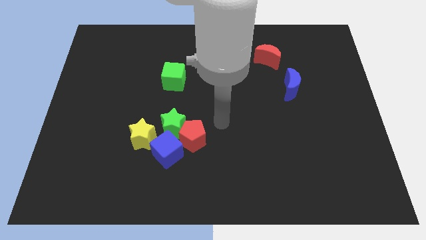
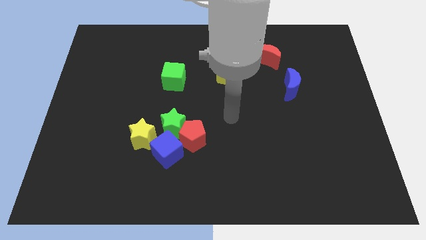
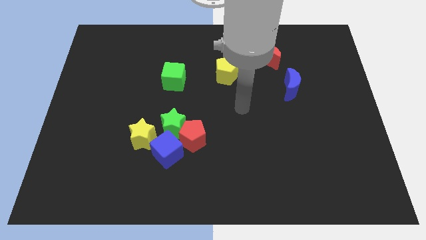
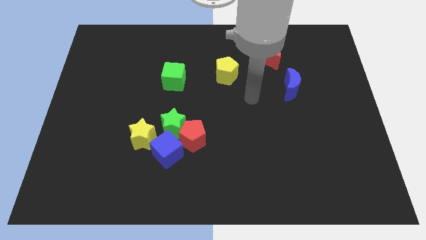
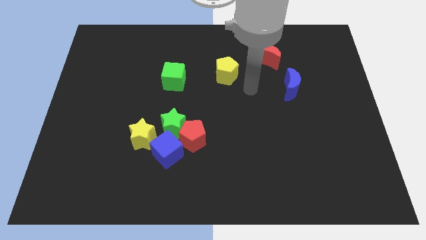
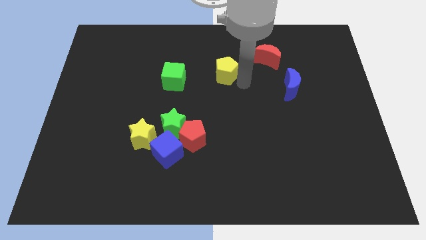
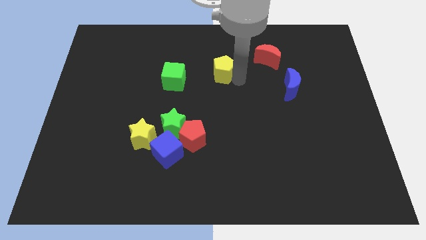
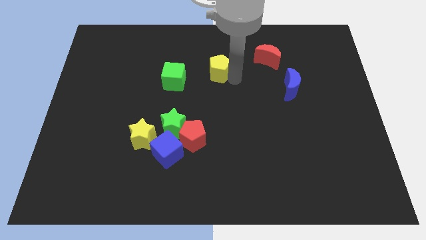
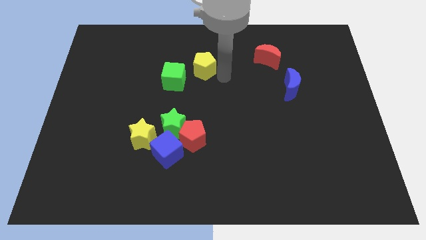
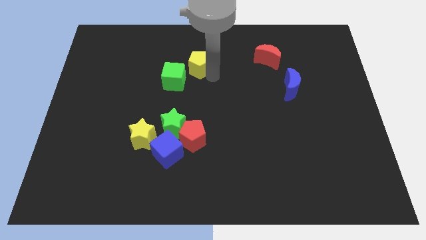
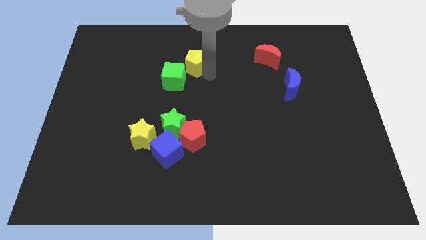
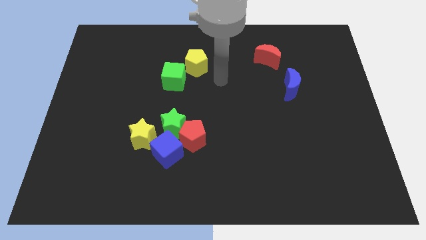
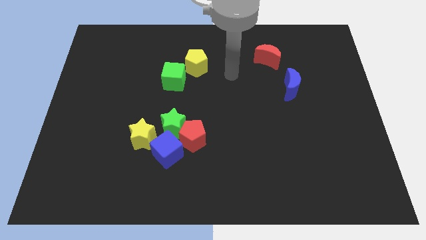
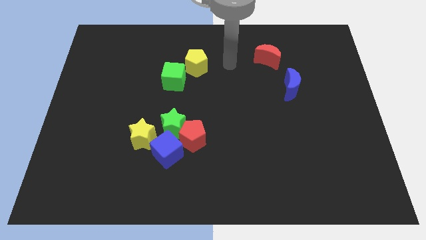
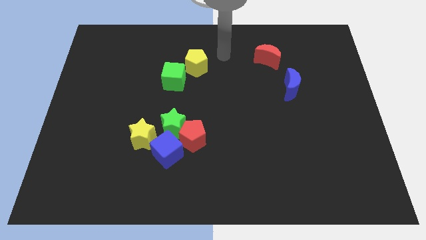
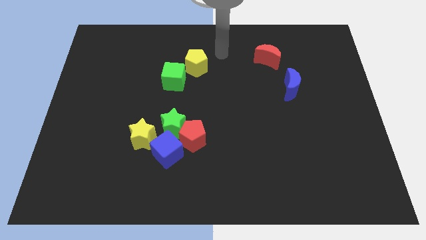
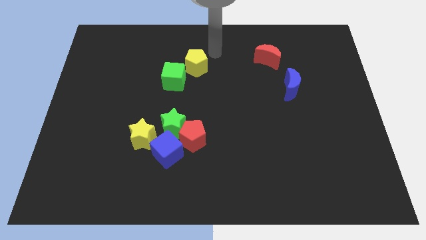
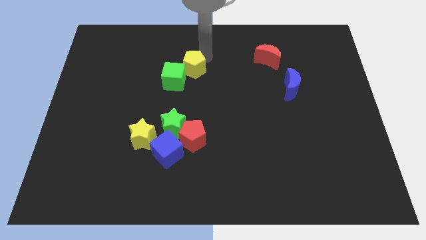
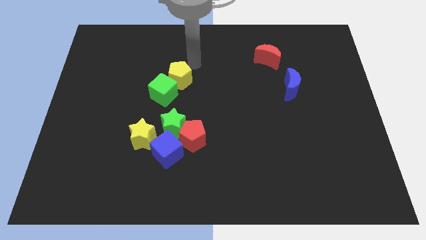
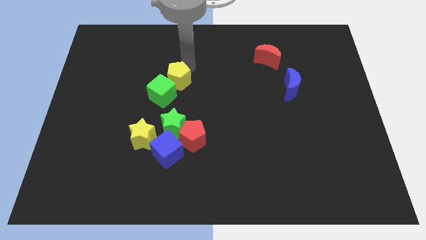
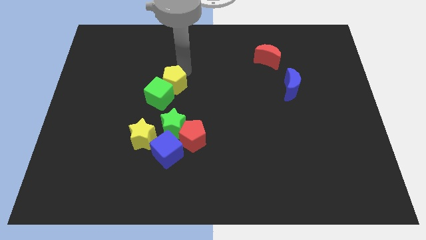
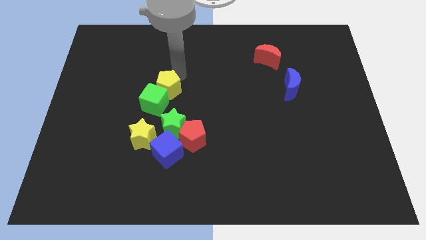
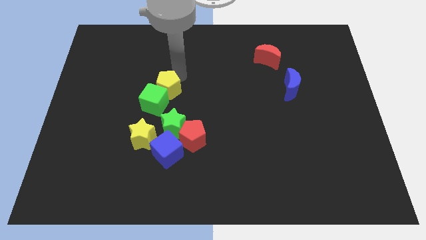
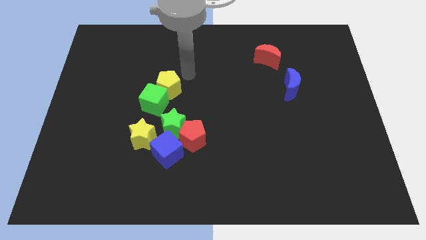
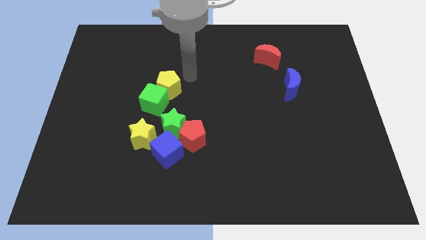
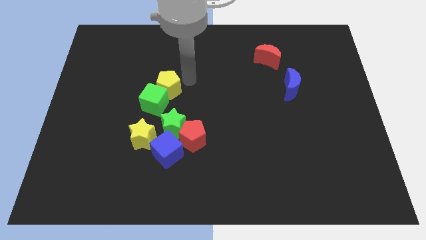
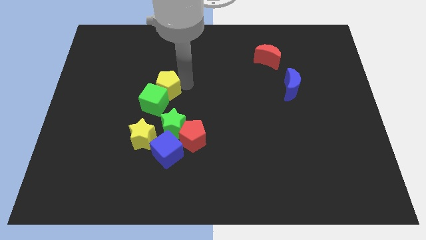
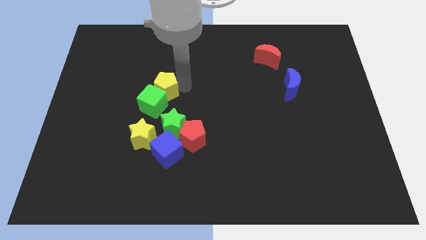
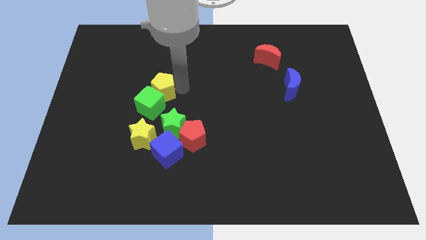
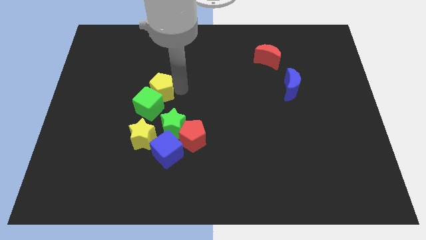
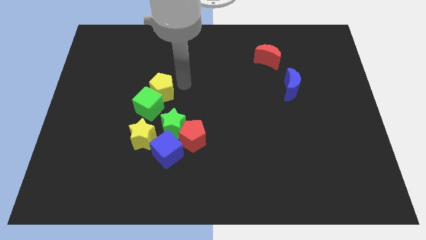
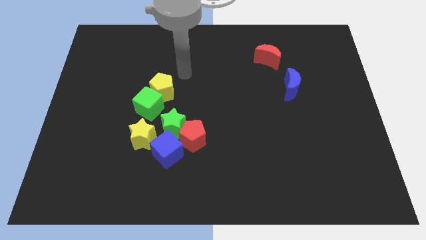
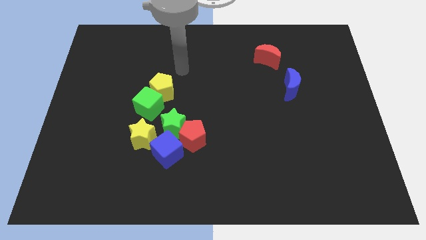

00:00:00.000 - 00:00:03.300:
push the yellow pentagon and green cube towards the group of blocks

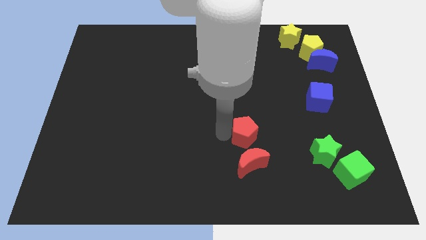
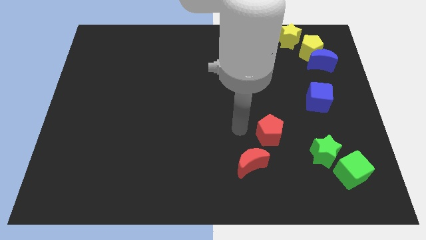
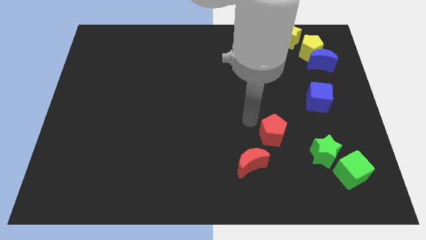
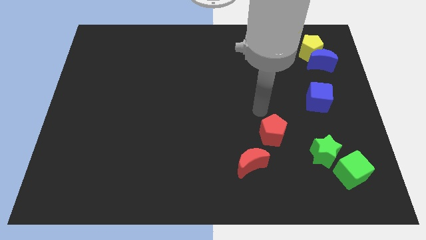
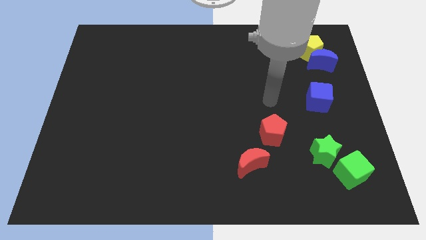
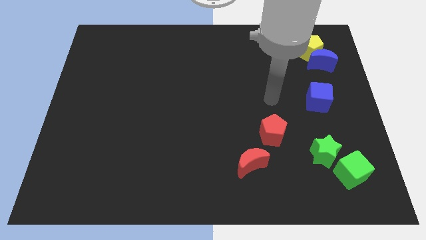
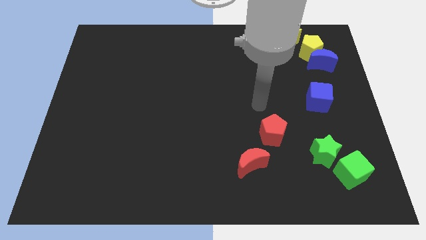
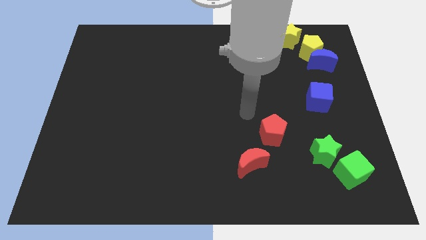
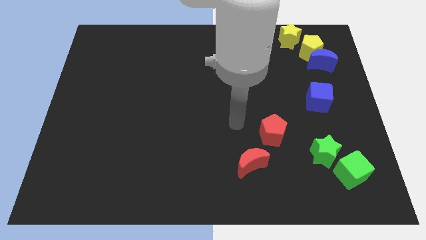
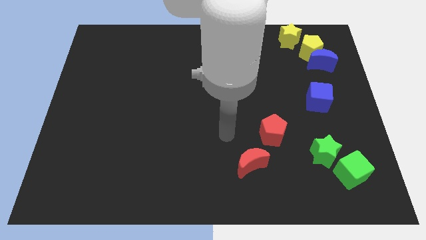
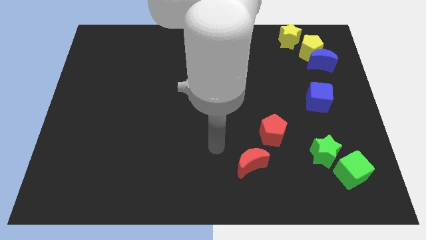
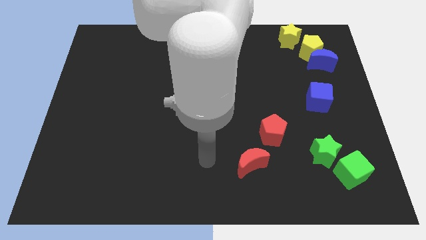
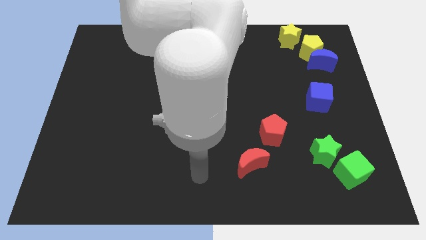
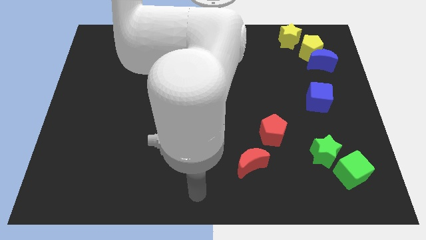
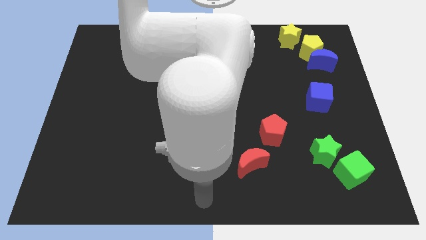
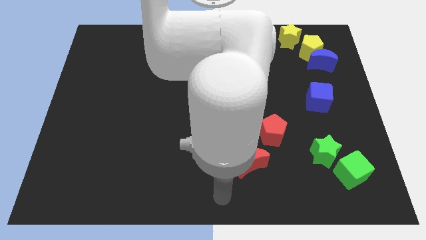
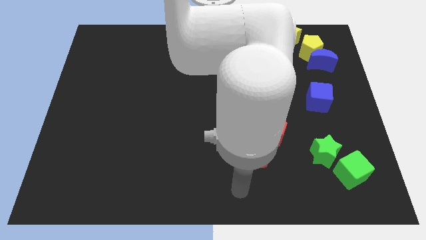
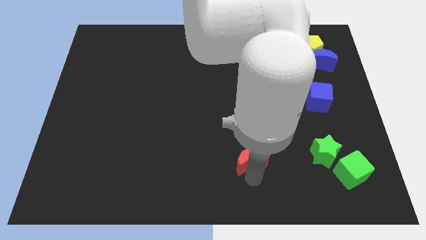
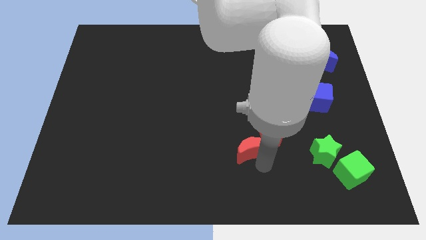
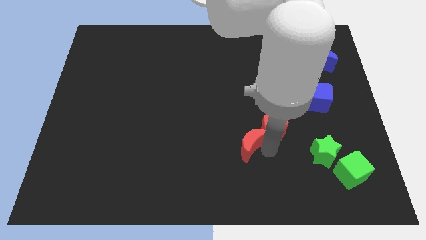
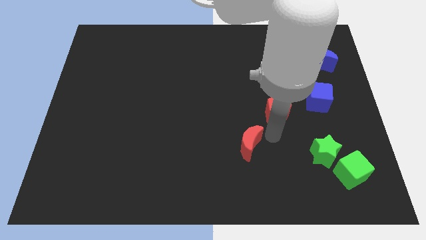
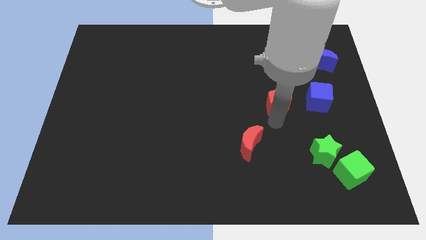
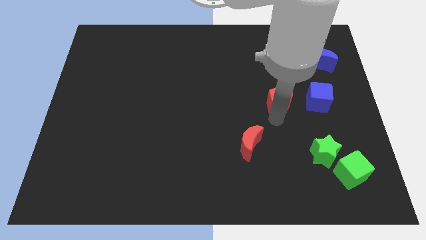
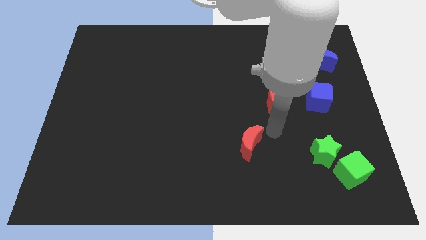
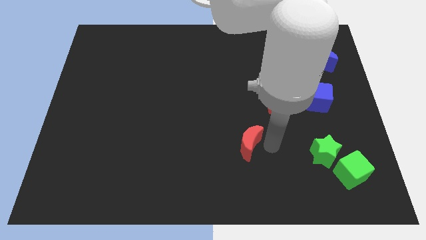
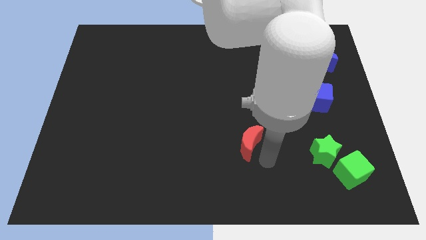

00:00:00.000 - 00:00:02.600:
move the red pentagon to the left of the blue cube

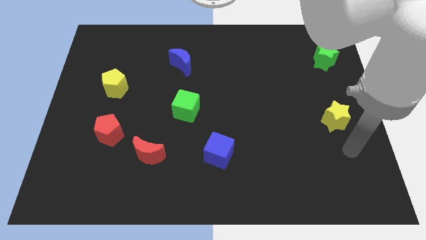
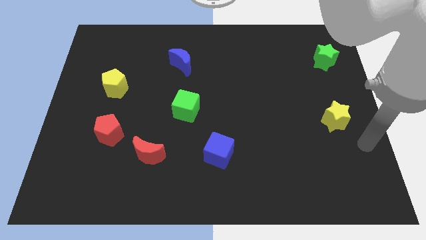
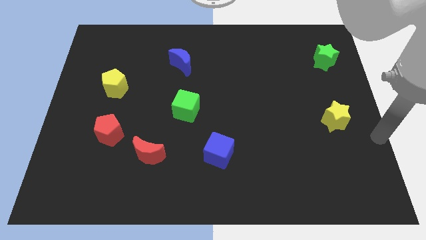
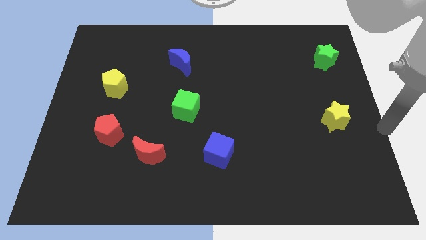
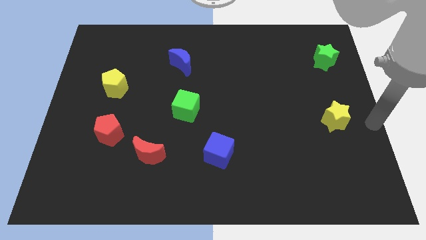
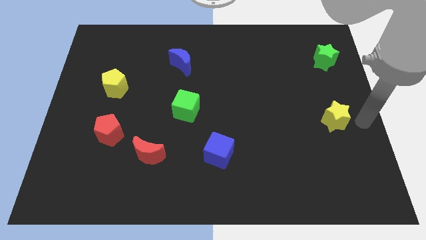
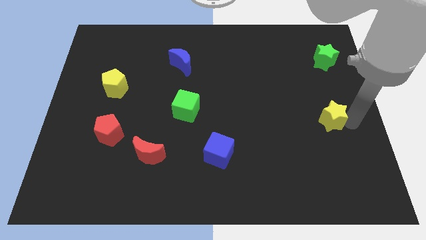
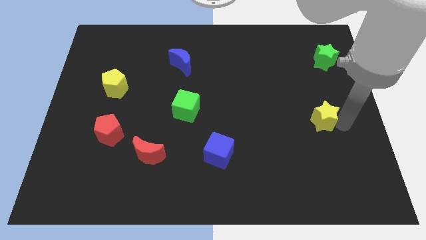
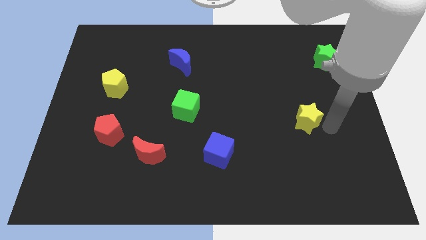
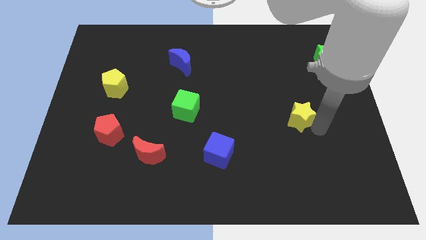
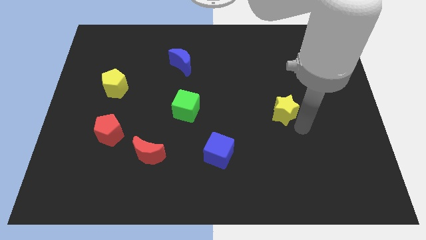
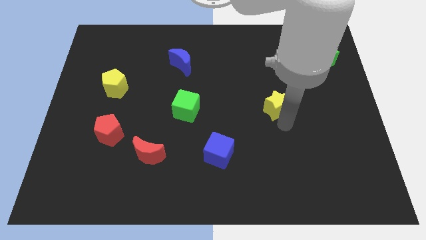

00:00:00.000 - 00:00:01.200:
move the yellow star diagonally top right to the blue cube

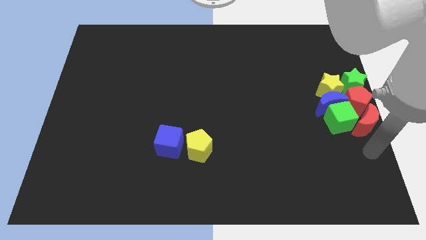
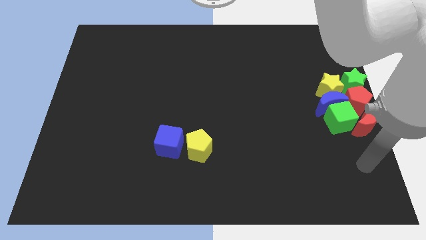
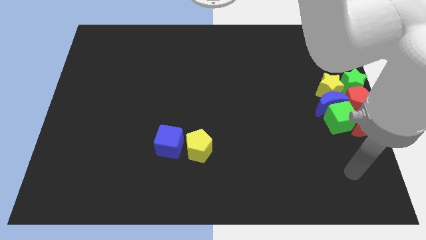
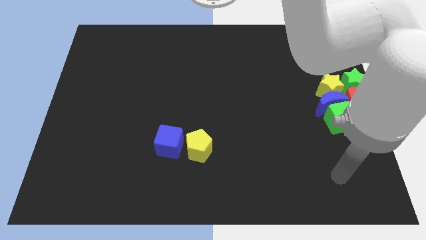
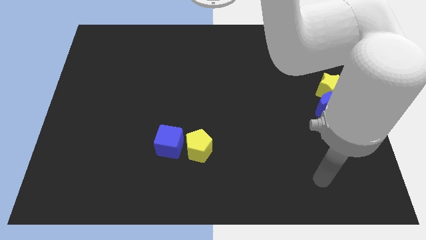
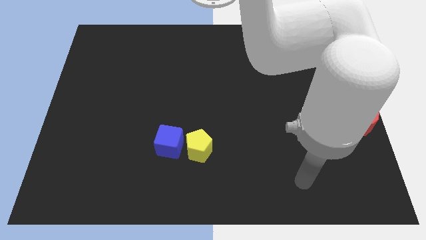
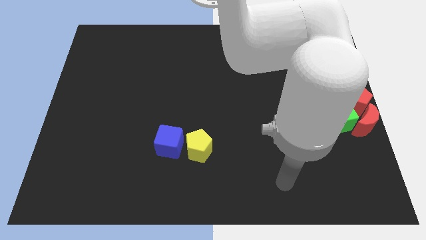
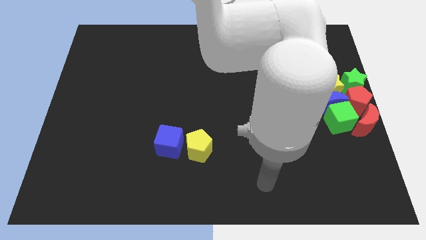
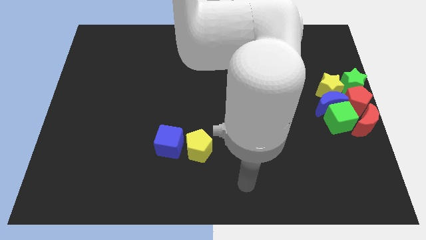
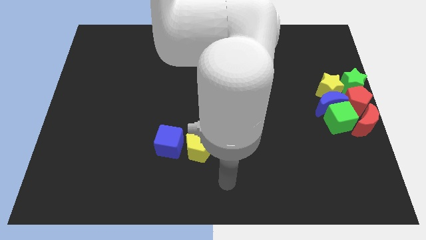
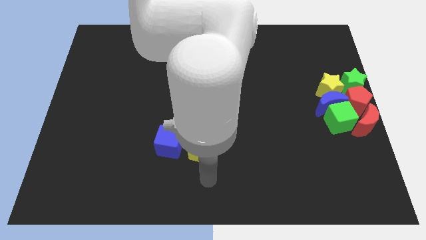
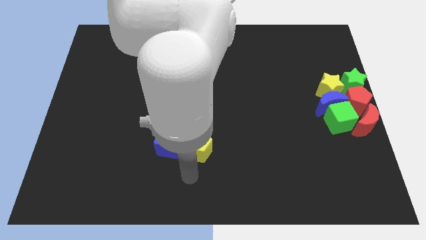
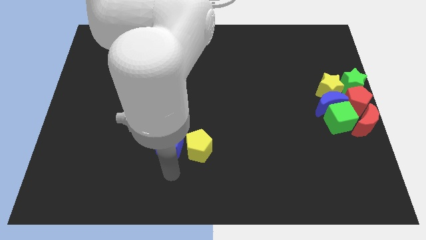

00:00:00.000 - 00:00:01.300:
move arm below the blue cube

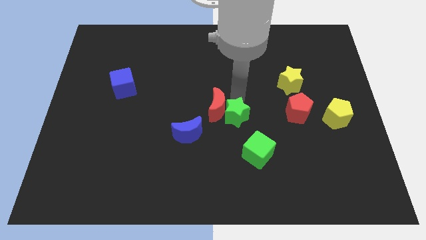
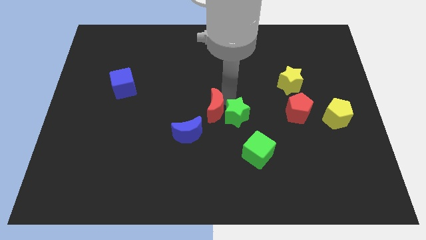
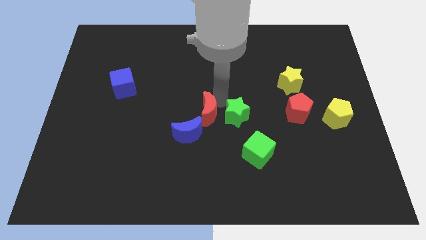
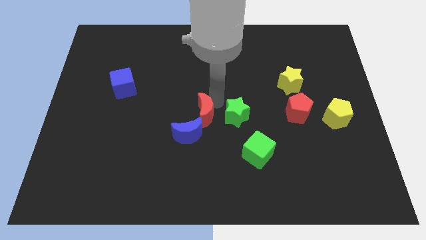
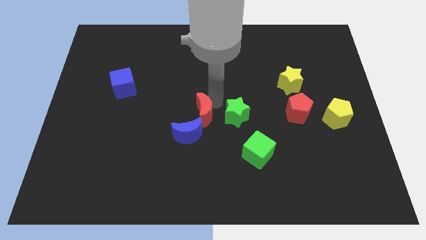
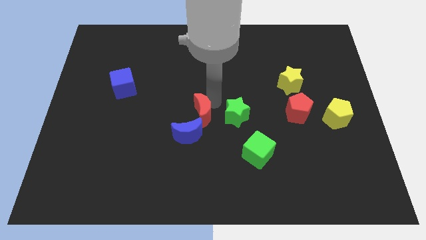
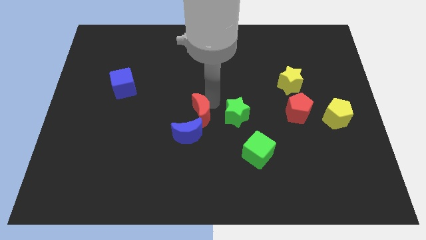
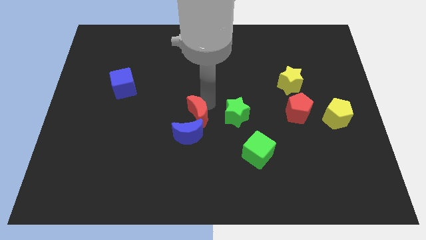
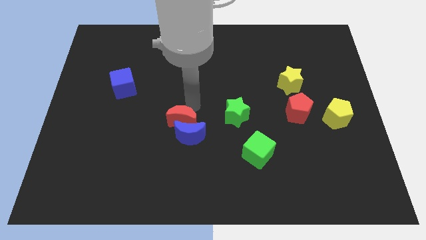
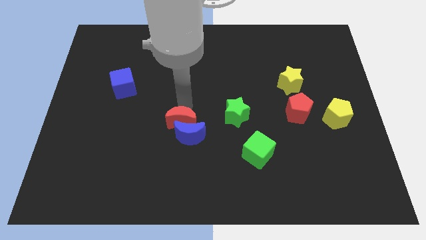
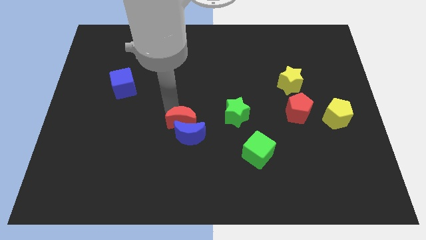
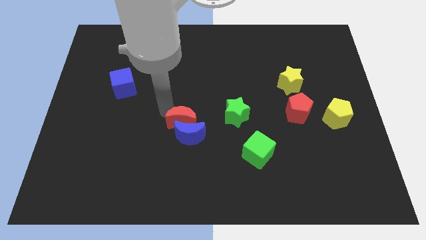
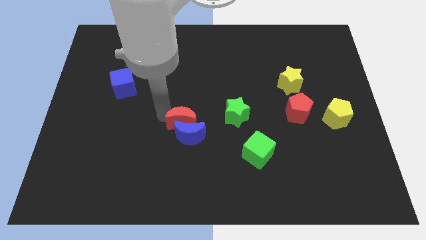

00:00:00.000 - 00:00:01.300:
place the red moon above the blue moon
